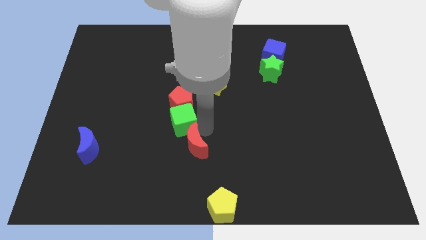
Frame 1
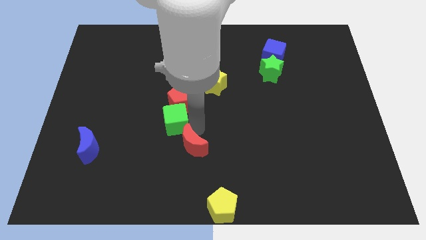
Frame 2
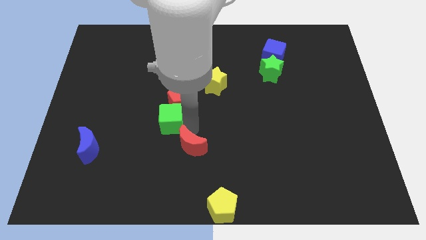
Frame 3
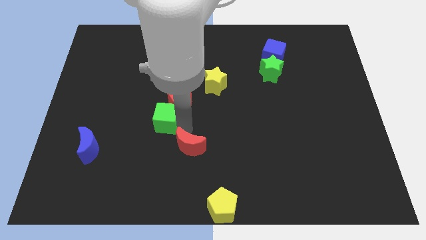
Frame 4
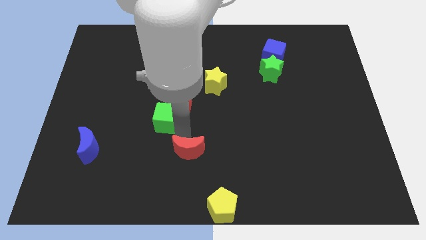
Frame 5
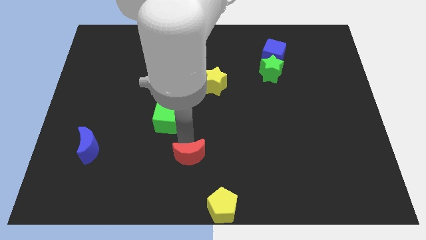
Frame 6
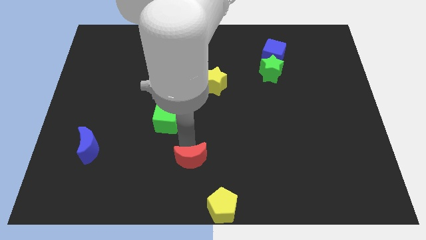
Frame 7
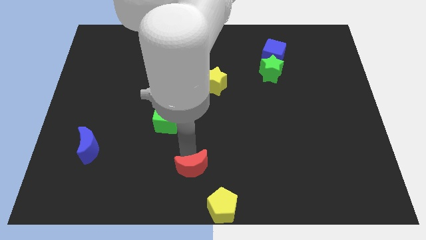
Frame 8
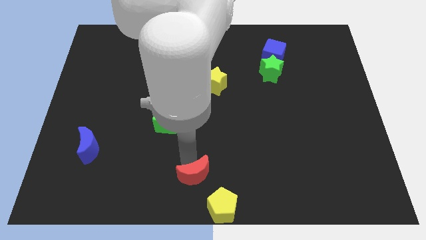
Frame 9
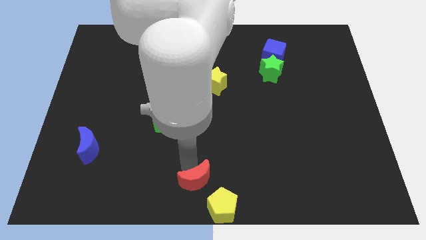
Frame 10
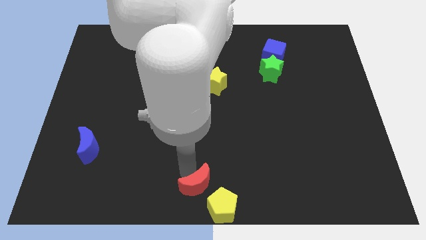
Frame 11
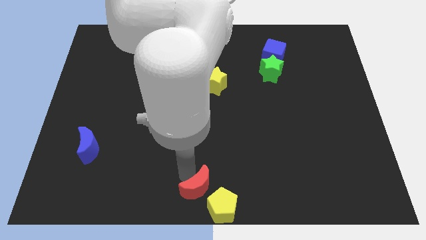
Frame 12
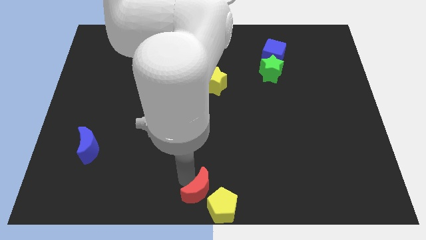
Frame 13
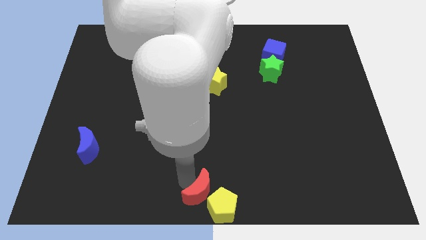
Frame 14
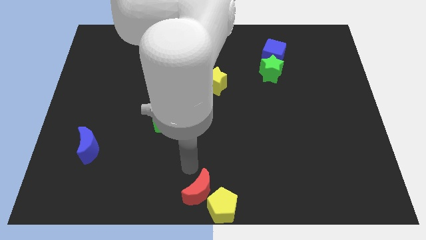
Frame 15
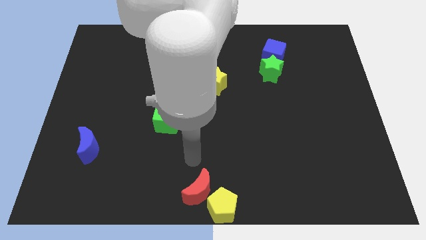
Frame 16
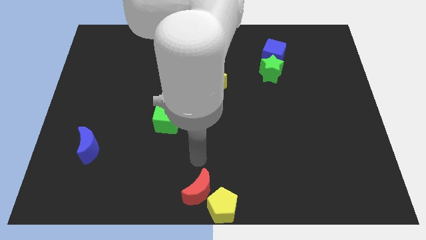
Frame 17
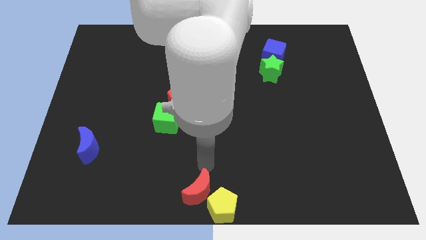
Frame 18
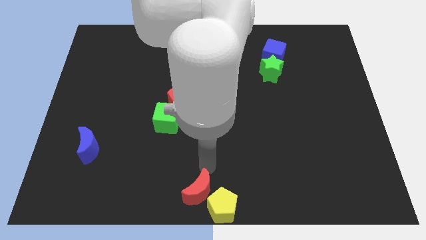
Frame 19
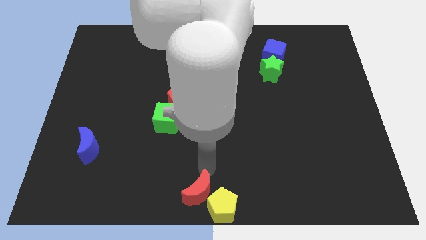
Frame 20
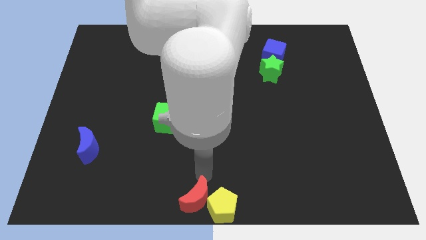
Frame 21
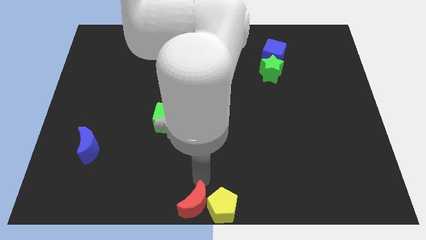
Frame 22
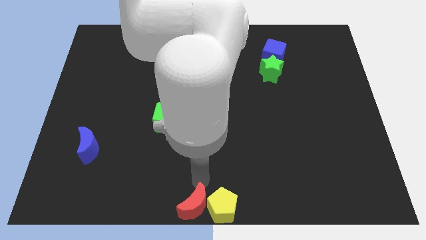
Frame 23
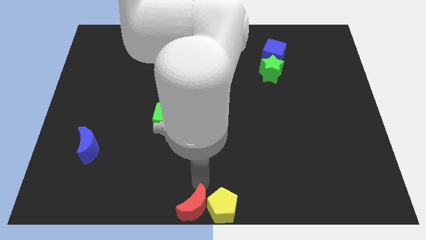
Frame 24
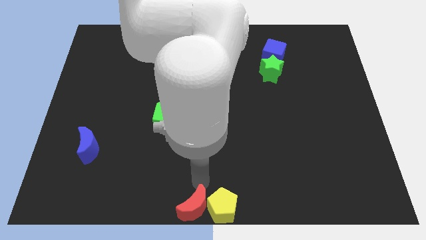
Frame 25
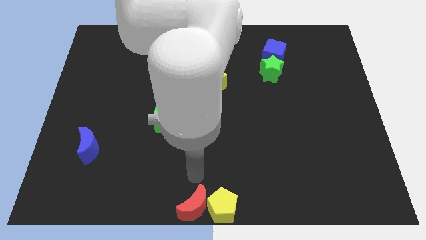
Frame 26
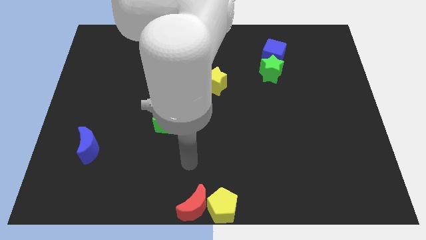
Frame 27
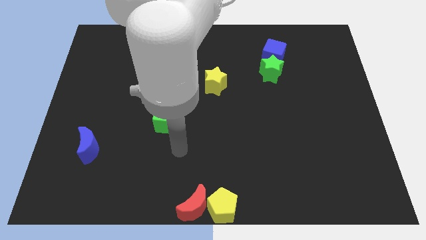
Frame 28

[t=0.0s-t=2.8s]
place red moon on left side of yellow pentagon

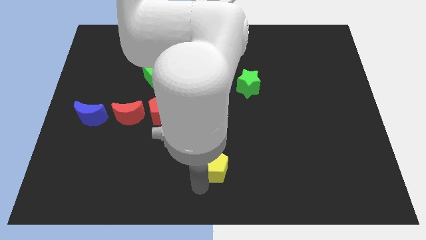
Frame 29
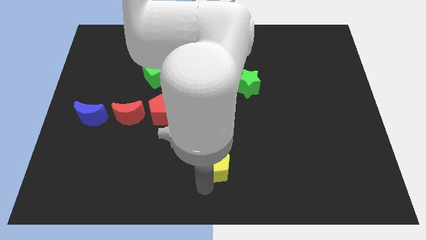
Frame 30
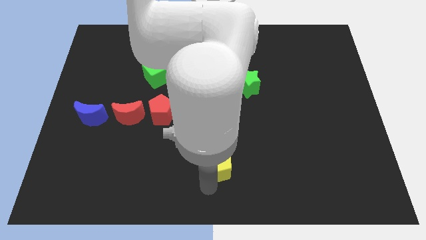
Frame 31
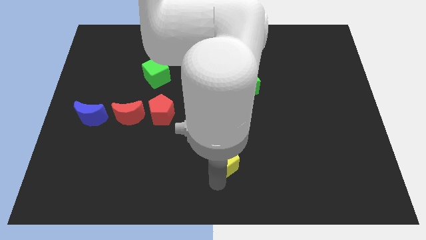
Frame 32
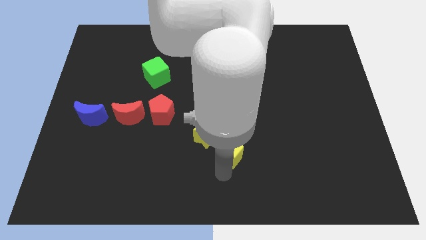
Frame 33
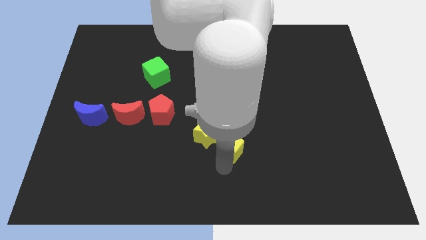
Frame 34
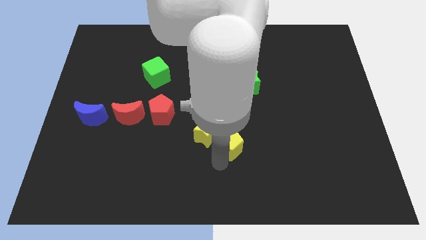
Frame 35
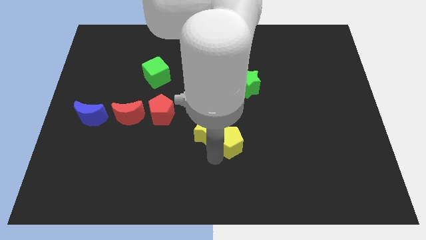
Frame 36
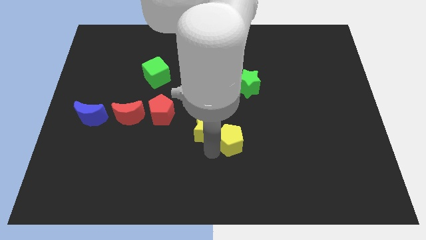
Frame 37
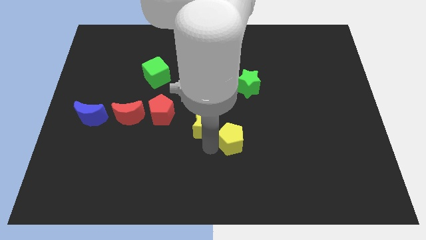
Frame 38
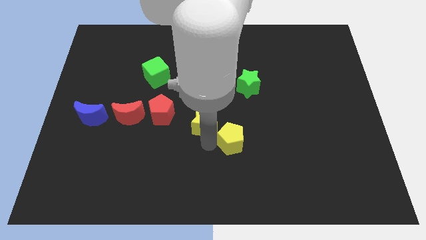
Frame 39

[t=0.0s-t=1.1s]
slide yellow pentagon into yellow star

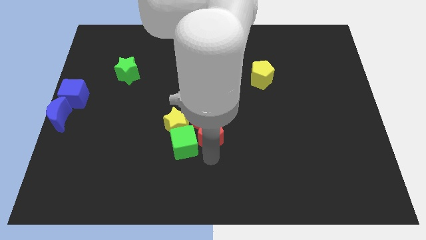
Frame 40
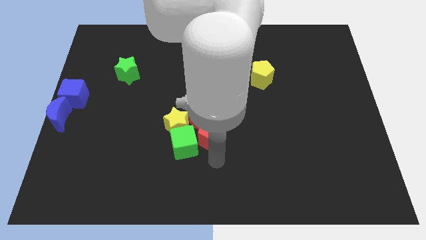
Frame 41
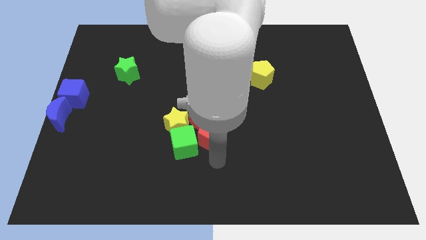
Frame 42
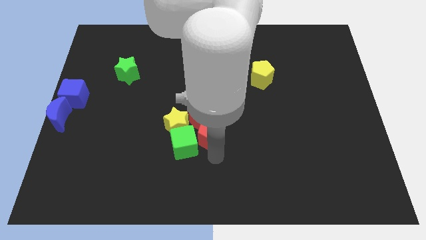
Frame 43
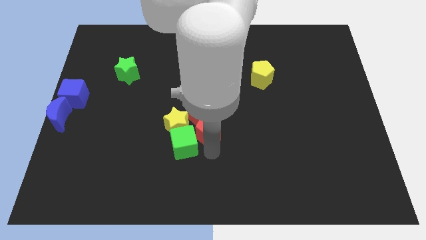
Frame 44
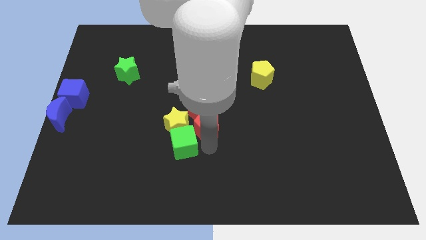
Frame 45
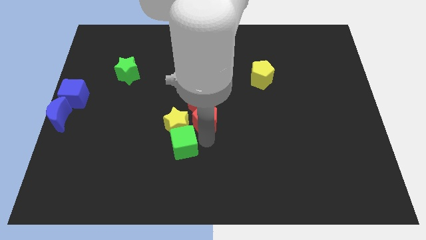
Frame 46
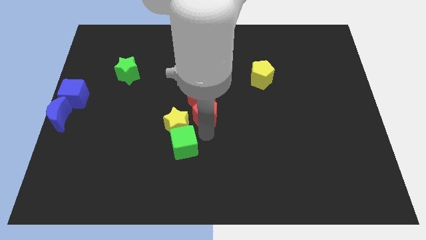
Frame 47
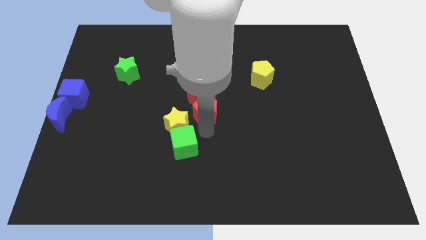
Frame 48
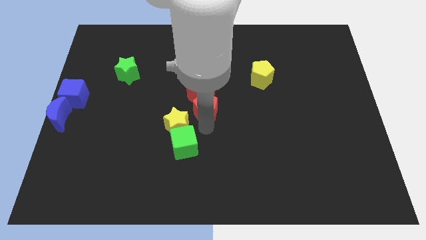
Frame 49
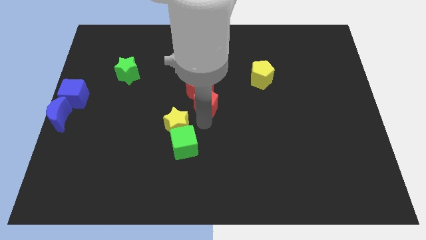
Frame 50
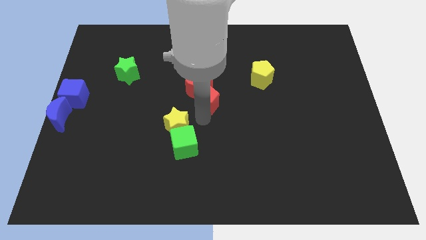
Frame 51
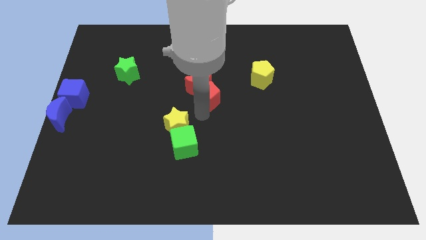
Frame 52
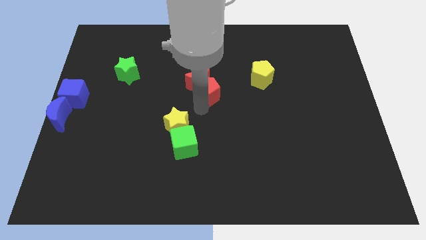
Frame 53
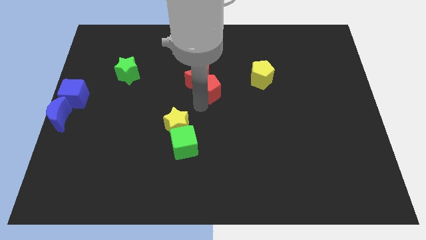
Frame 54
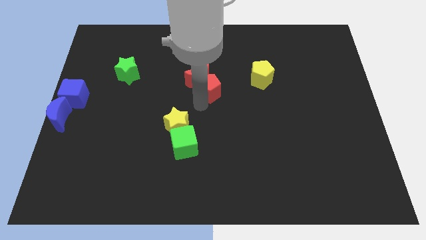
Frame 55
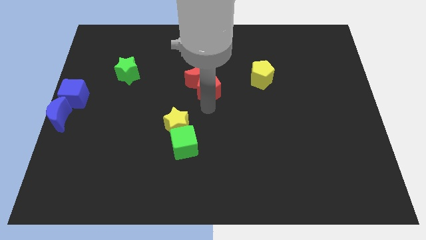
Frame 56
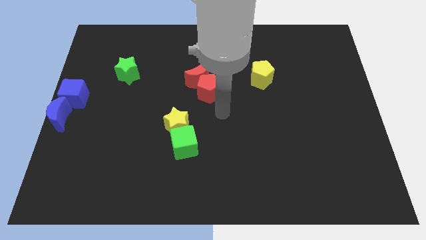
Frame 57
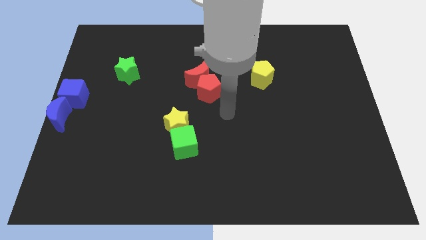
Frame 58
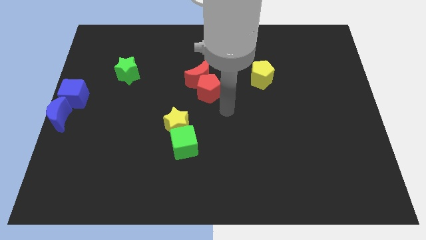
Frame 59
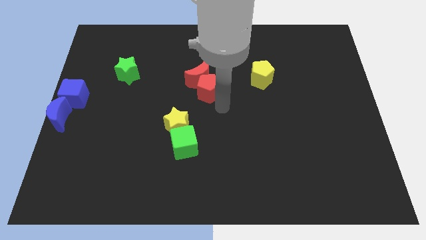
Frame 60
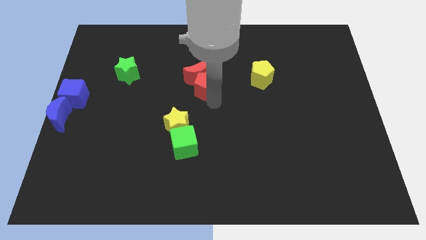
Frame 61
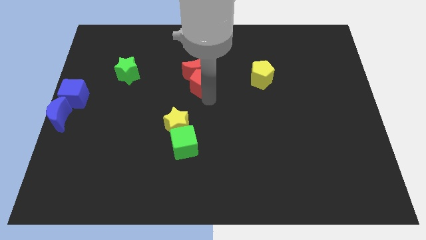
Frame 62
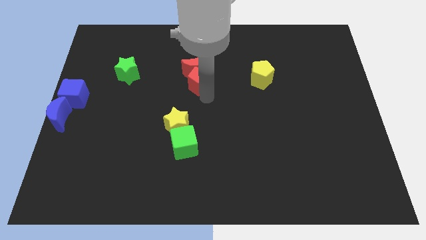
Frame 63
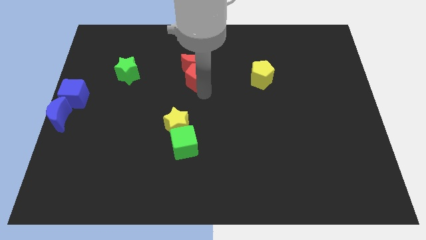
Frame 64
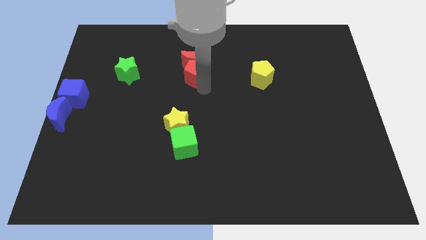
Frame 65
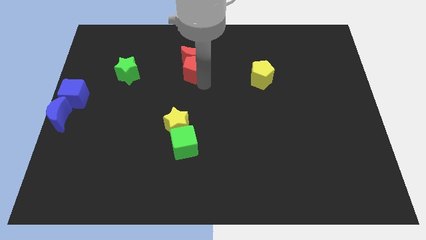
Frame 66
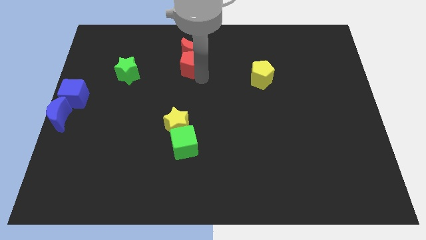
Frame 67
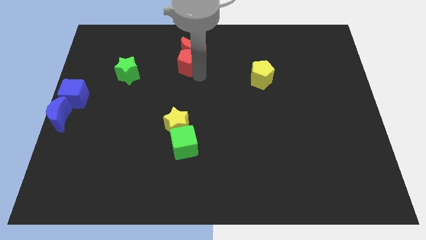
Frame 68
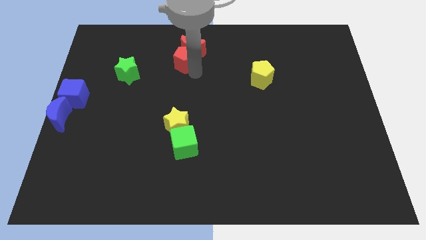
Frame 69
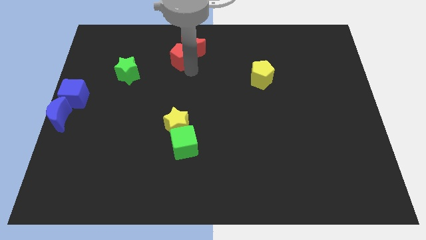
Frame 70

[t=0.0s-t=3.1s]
push red blocks towards top center

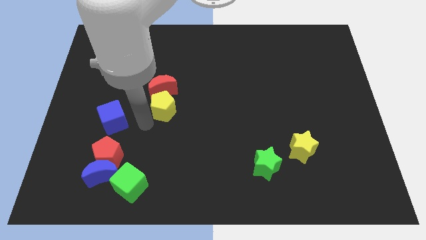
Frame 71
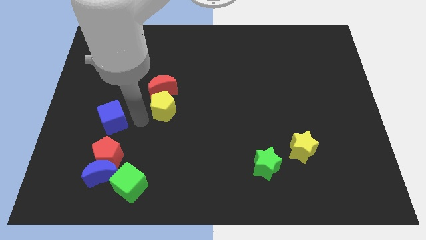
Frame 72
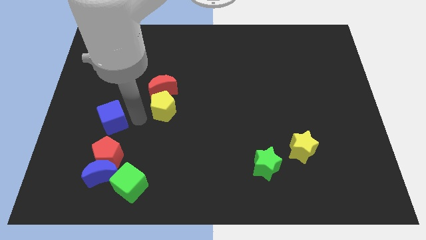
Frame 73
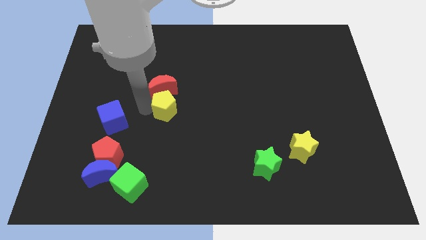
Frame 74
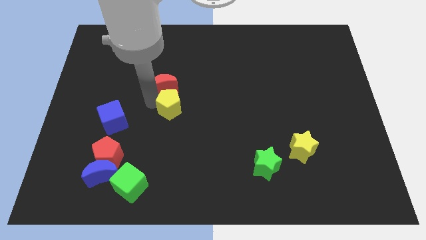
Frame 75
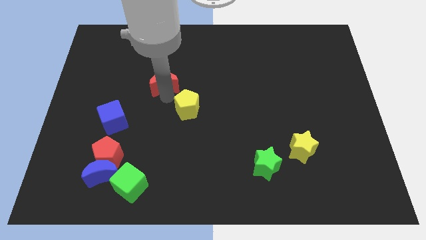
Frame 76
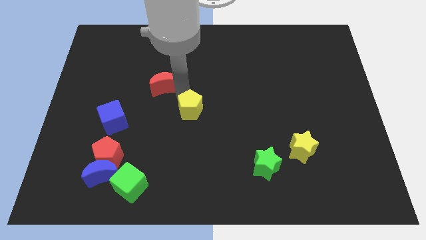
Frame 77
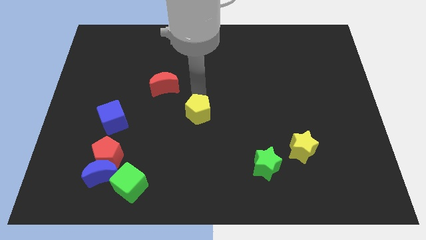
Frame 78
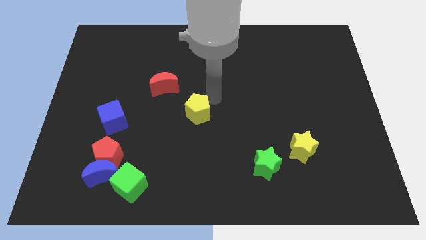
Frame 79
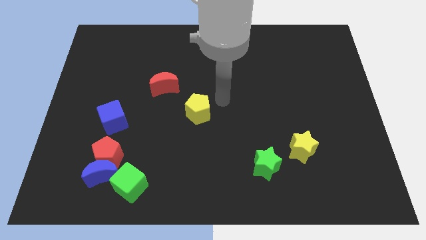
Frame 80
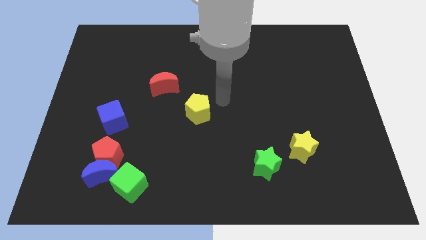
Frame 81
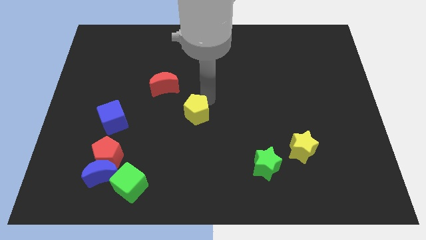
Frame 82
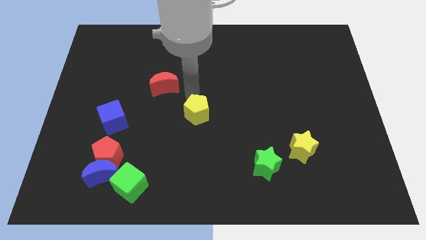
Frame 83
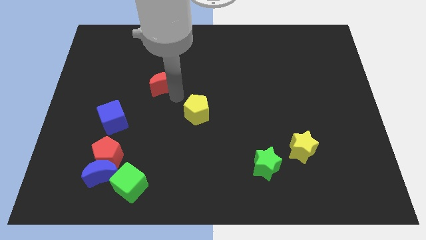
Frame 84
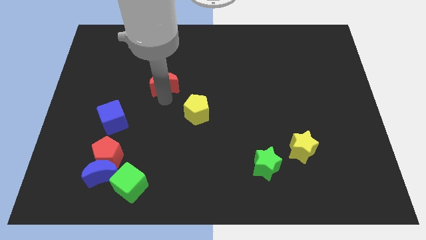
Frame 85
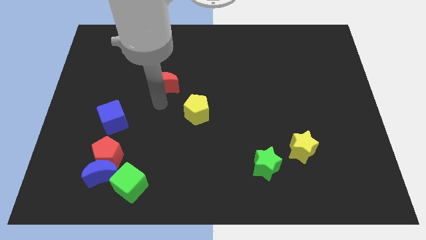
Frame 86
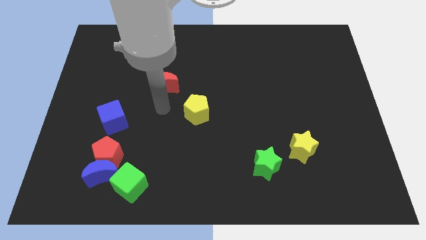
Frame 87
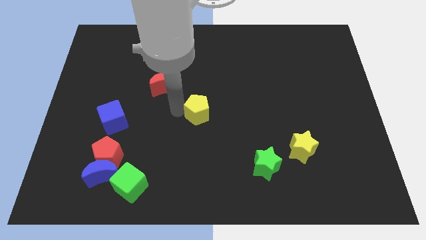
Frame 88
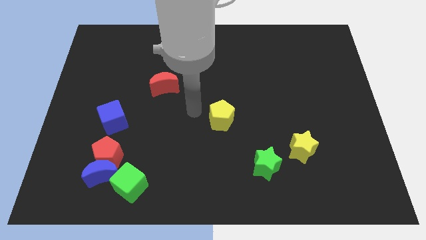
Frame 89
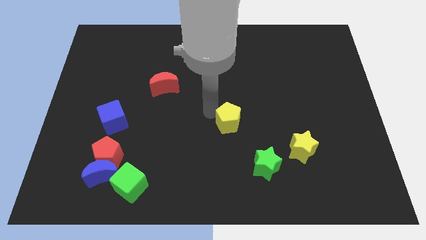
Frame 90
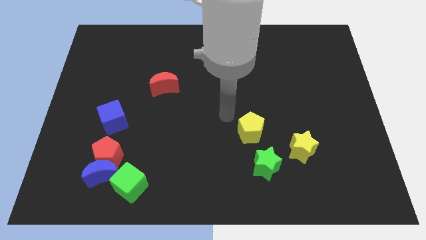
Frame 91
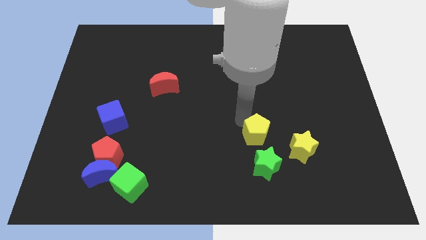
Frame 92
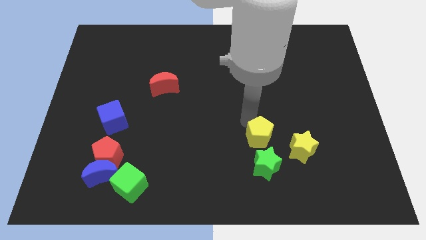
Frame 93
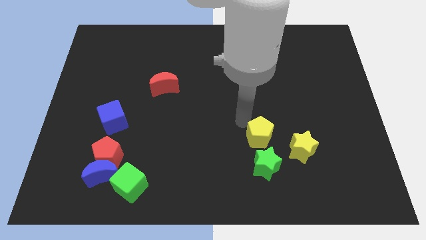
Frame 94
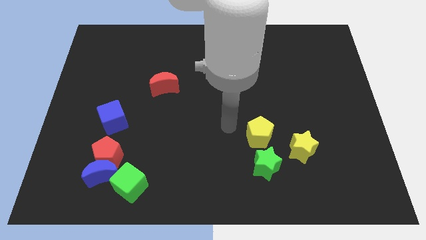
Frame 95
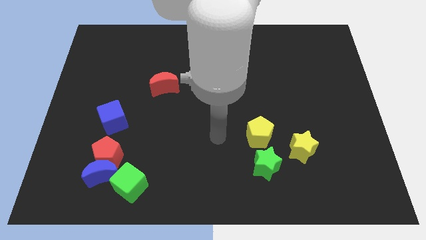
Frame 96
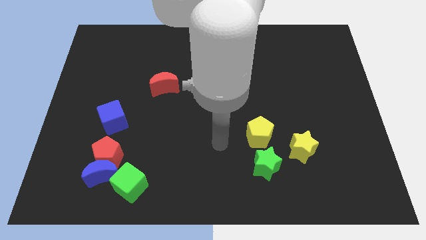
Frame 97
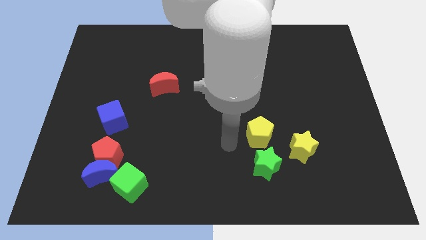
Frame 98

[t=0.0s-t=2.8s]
move the yellow pentagon to the top of the green star
